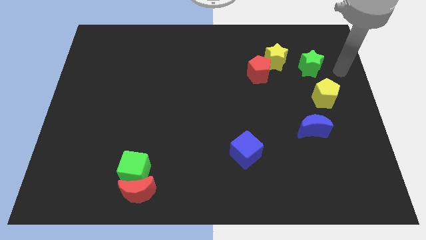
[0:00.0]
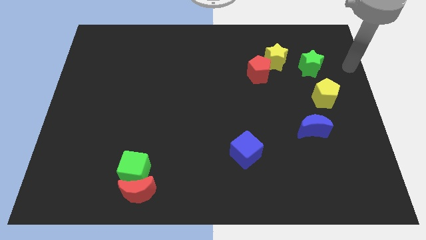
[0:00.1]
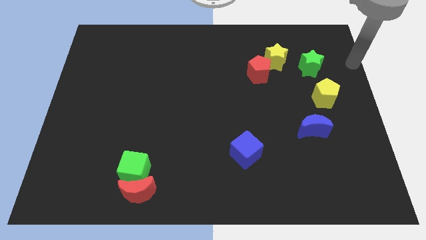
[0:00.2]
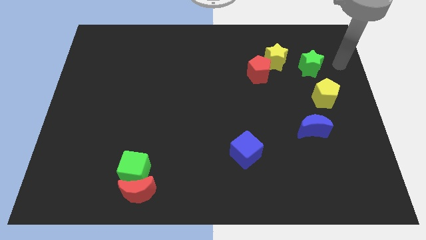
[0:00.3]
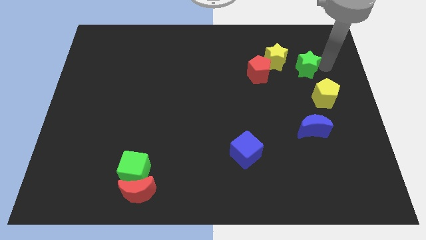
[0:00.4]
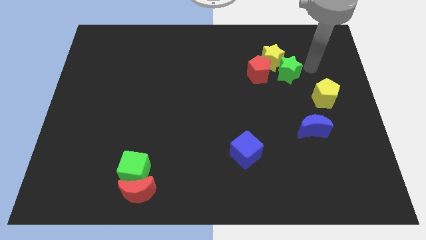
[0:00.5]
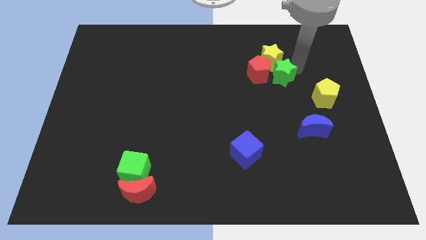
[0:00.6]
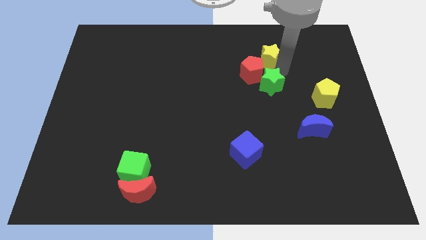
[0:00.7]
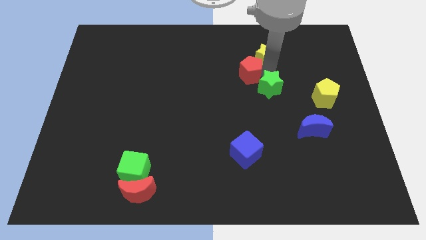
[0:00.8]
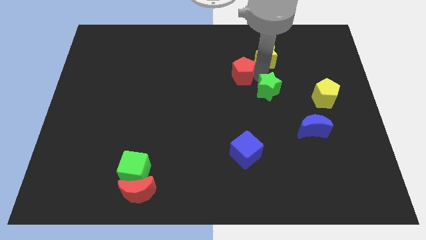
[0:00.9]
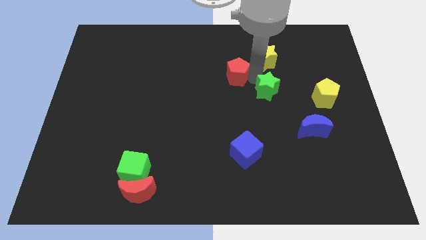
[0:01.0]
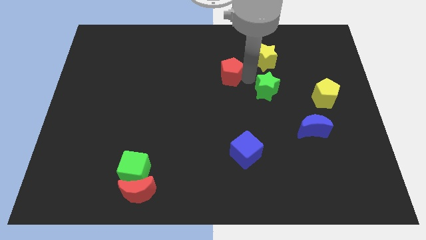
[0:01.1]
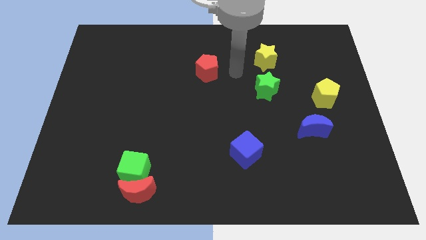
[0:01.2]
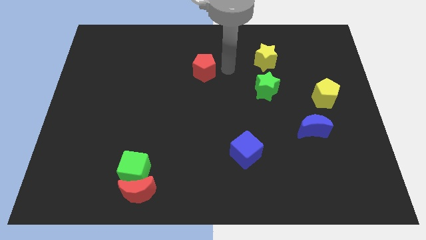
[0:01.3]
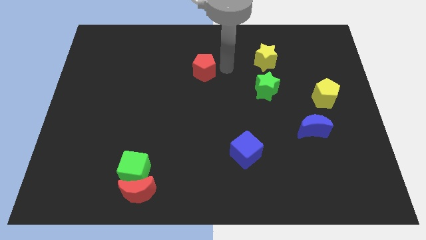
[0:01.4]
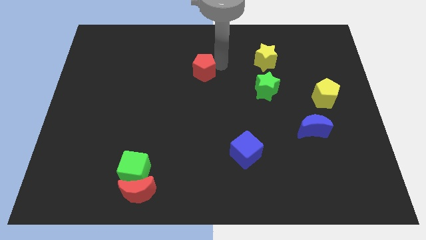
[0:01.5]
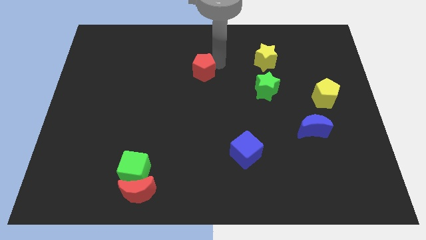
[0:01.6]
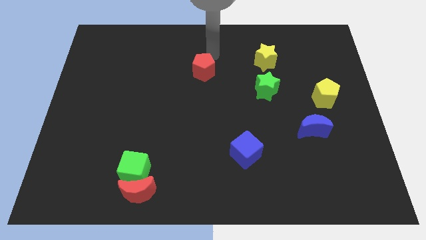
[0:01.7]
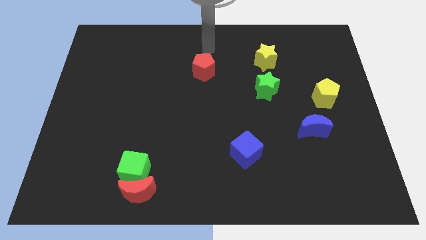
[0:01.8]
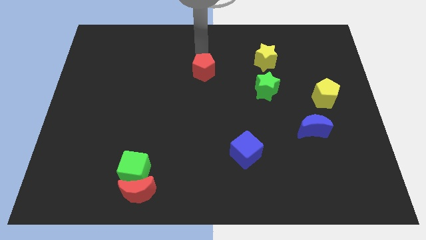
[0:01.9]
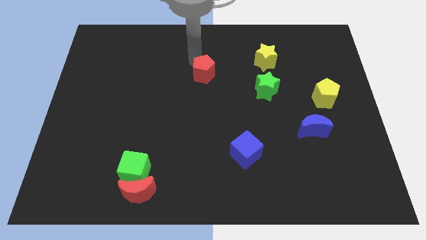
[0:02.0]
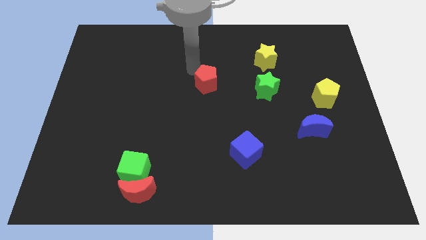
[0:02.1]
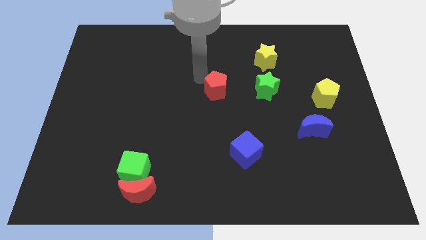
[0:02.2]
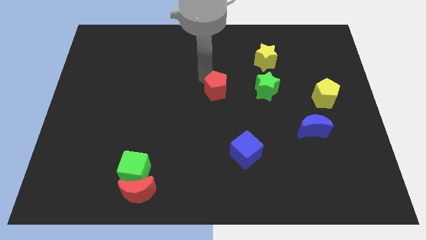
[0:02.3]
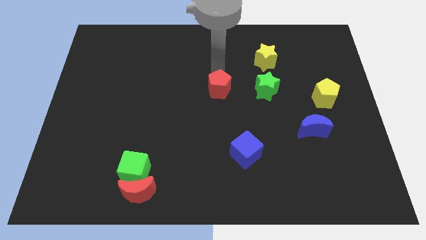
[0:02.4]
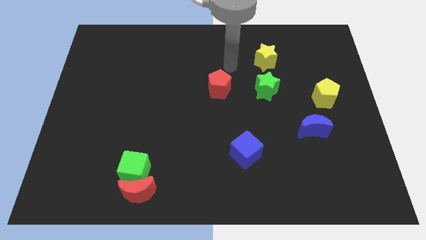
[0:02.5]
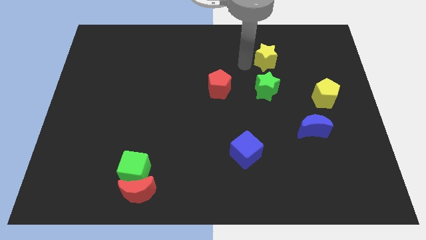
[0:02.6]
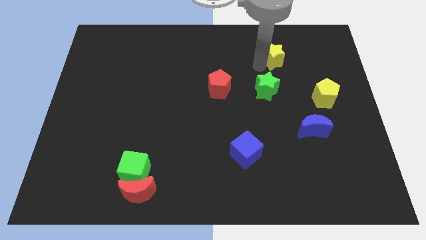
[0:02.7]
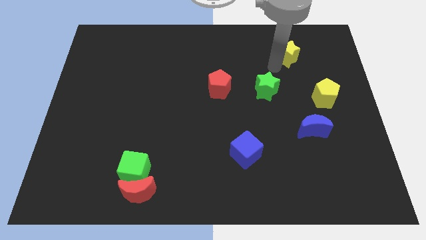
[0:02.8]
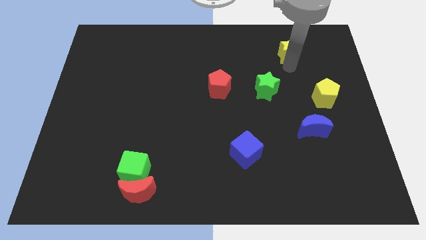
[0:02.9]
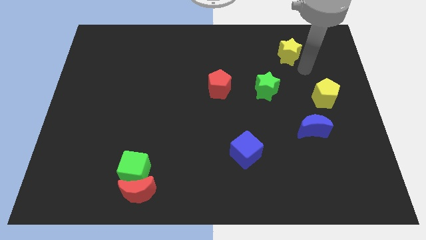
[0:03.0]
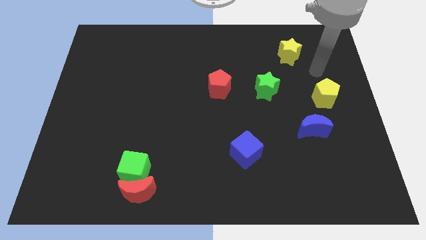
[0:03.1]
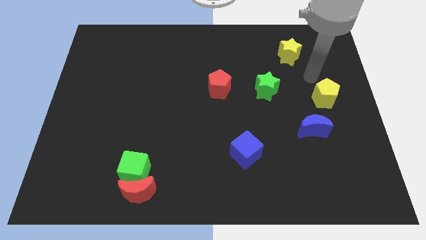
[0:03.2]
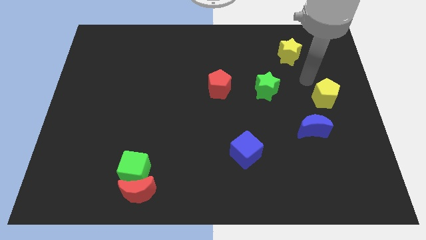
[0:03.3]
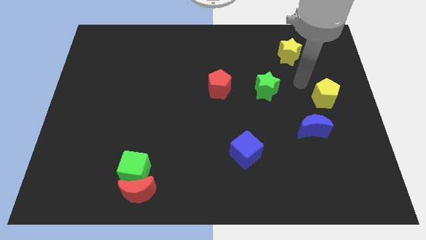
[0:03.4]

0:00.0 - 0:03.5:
place yellow star diagonal above green star

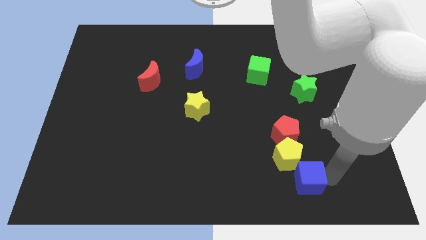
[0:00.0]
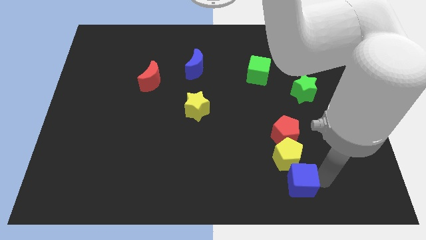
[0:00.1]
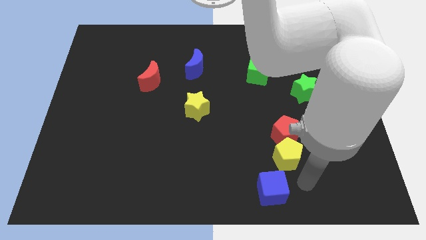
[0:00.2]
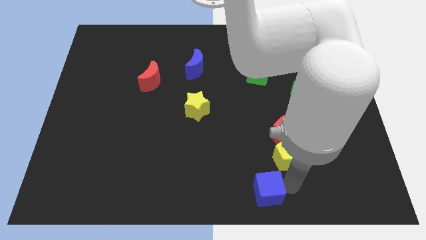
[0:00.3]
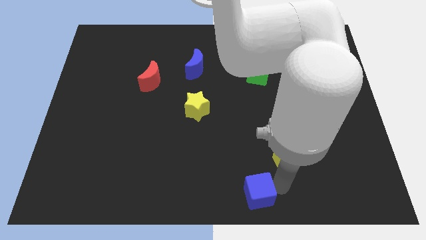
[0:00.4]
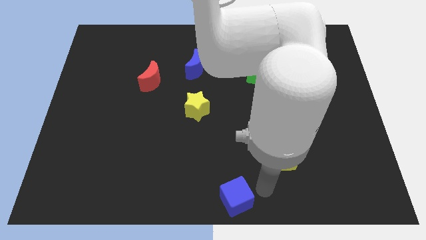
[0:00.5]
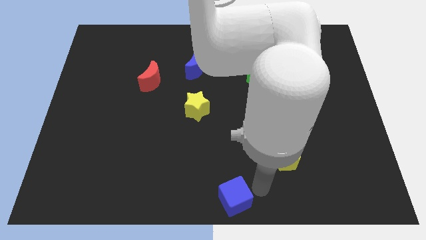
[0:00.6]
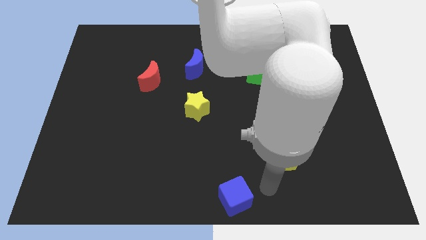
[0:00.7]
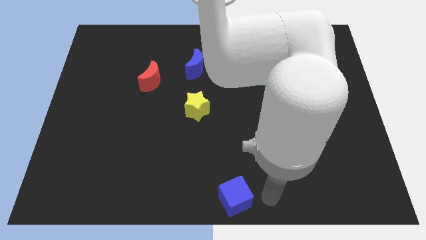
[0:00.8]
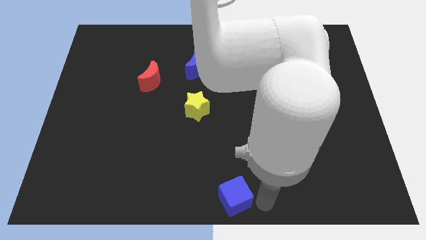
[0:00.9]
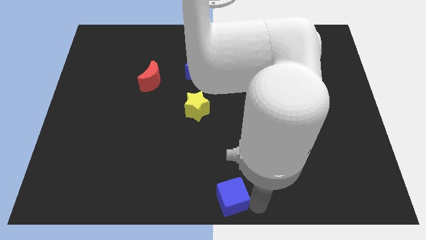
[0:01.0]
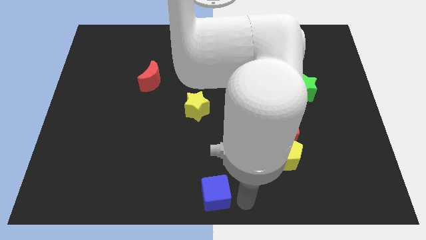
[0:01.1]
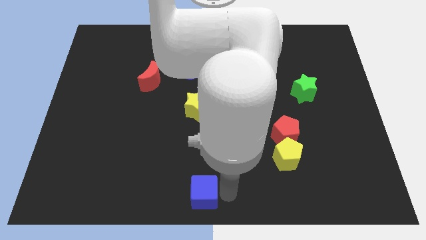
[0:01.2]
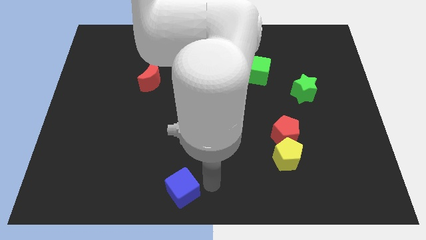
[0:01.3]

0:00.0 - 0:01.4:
place the blue cube below the yellow star

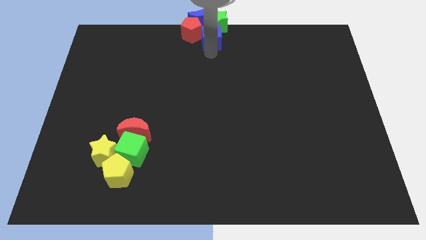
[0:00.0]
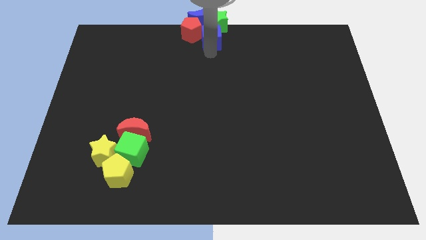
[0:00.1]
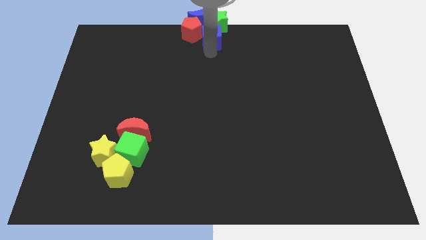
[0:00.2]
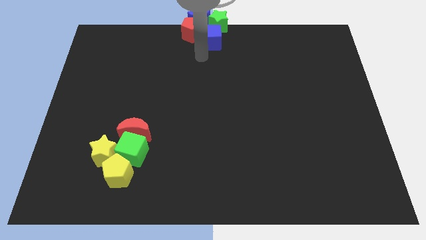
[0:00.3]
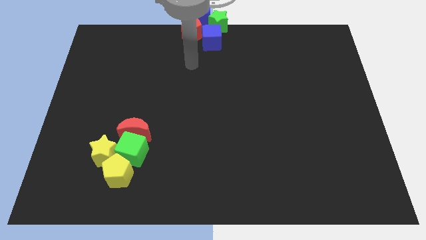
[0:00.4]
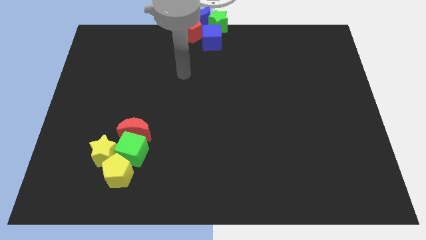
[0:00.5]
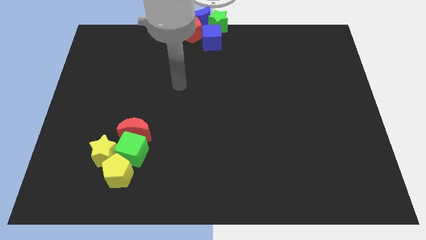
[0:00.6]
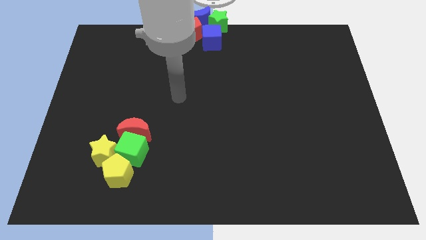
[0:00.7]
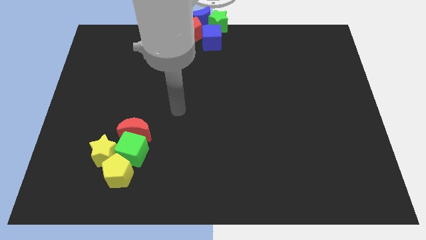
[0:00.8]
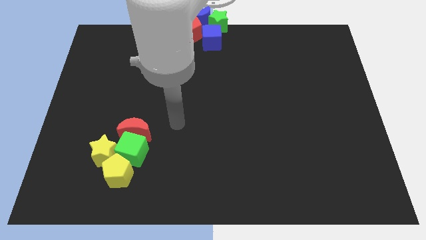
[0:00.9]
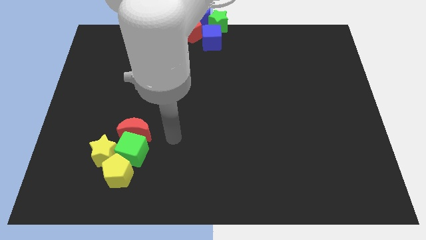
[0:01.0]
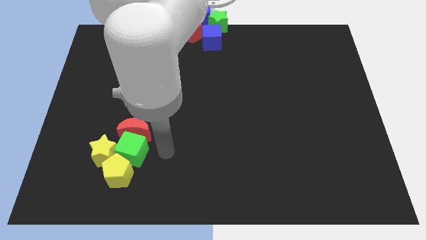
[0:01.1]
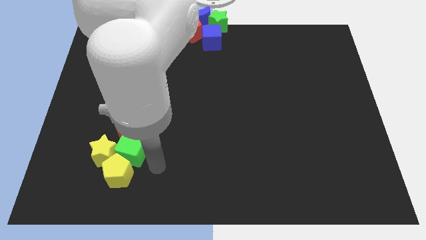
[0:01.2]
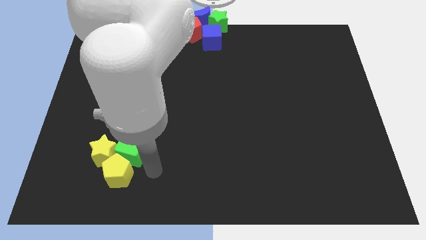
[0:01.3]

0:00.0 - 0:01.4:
move your arm away from the blue cube

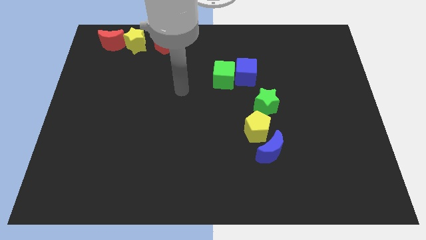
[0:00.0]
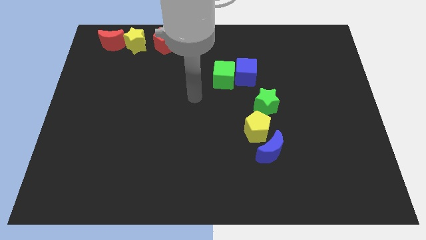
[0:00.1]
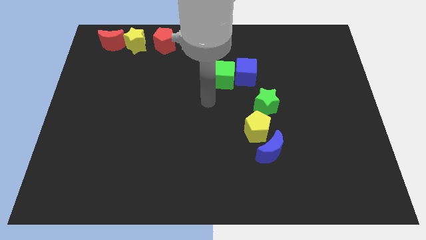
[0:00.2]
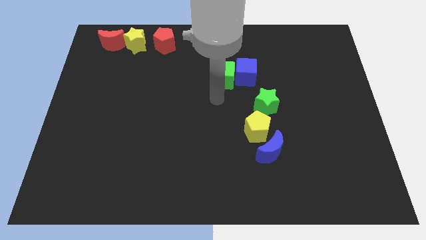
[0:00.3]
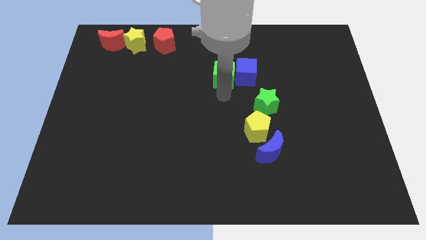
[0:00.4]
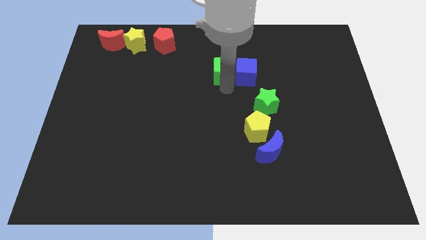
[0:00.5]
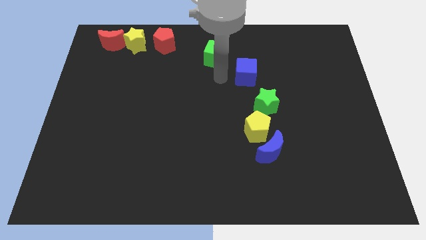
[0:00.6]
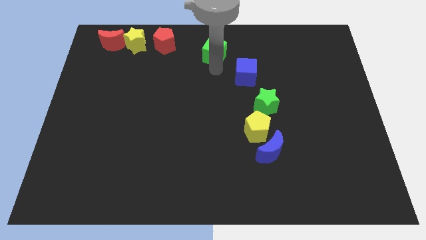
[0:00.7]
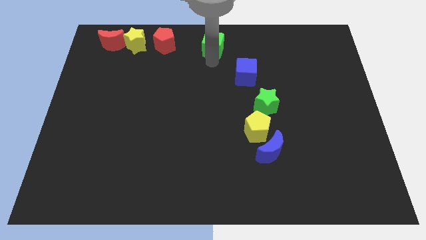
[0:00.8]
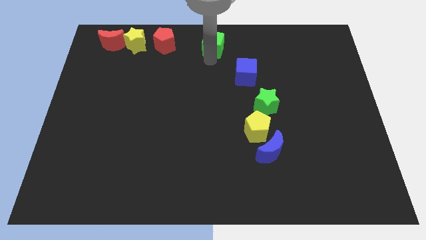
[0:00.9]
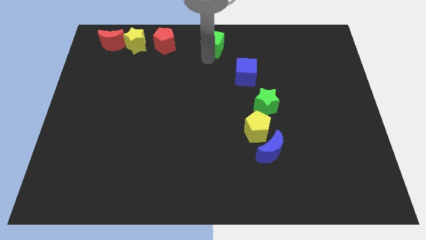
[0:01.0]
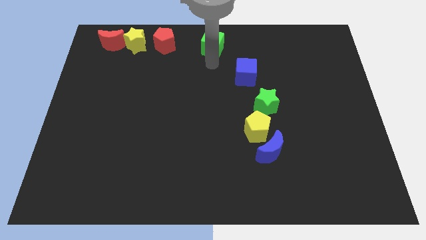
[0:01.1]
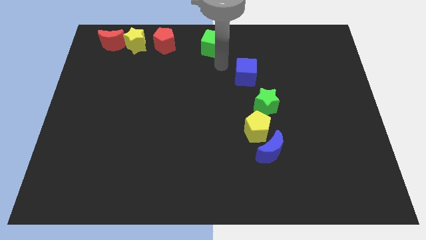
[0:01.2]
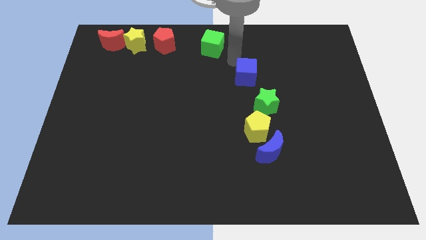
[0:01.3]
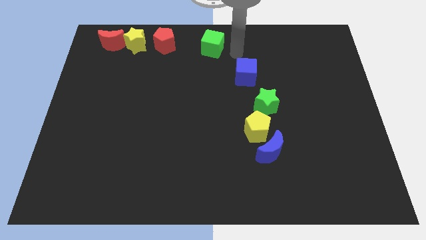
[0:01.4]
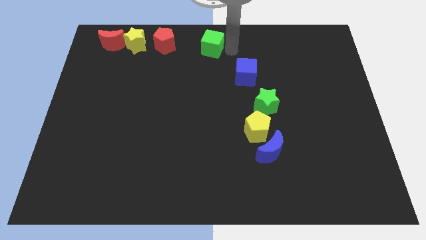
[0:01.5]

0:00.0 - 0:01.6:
push the green cube to the top center of the board

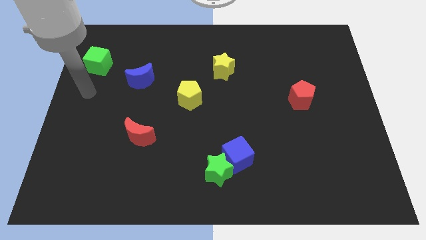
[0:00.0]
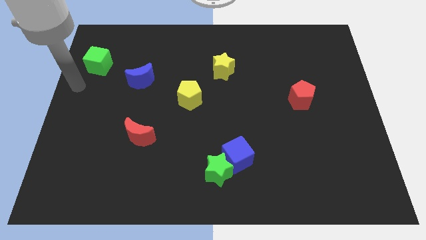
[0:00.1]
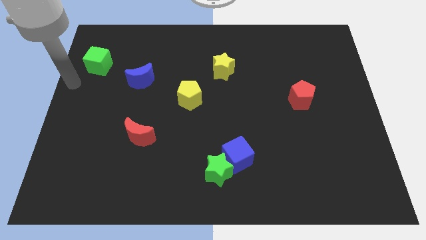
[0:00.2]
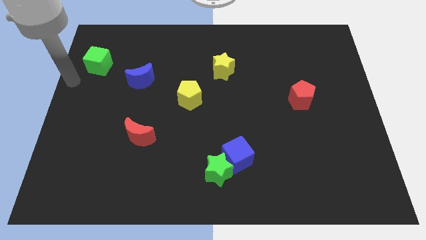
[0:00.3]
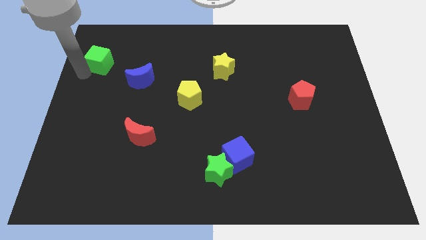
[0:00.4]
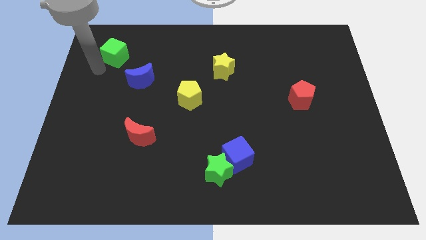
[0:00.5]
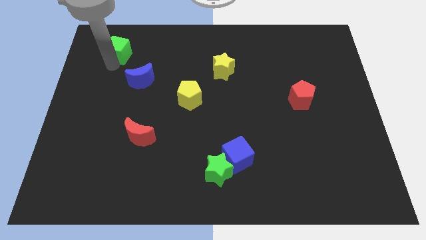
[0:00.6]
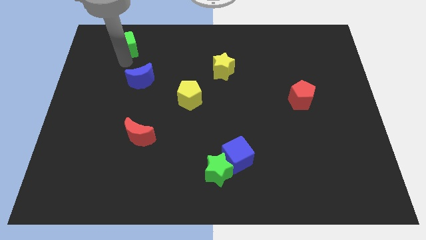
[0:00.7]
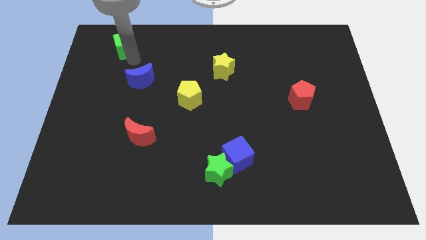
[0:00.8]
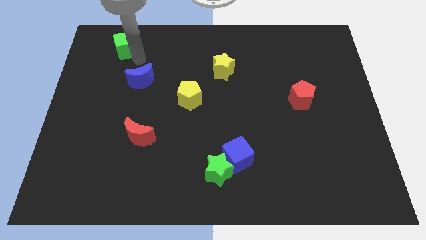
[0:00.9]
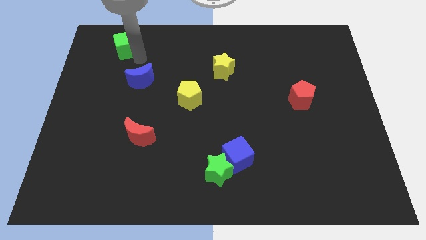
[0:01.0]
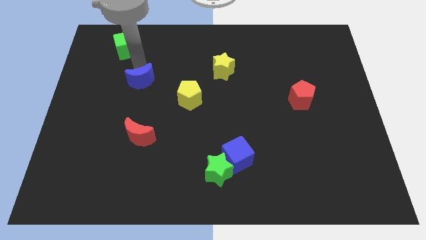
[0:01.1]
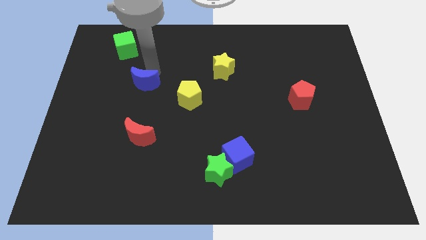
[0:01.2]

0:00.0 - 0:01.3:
move the green cube to the top side of the blue moon
